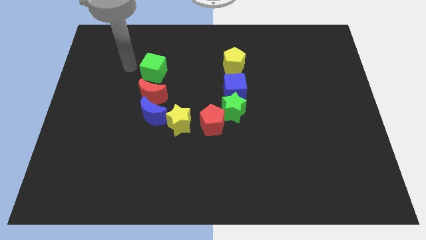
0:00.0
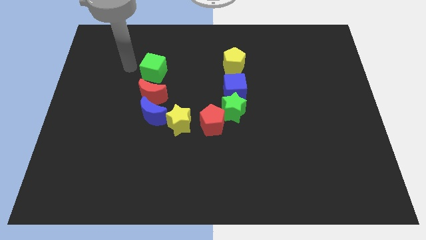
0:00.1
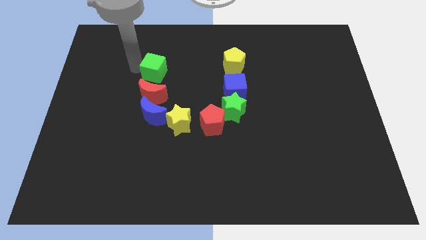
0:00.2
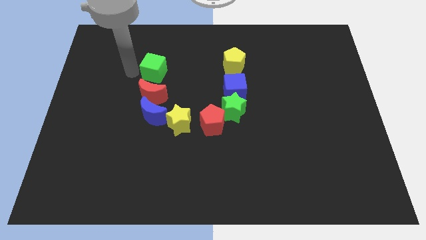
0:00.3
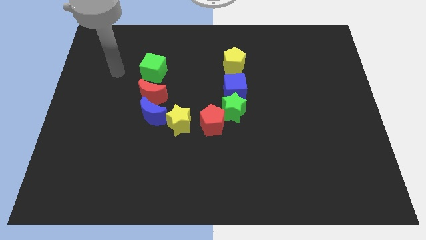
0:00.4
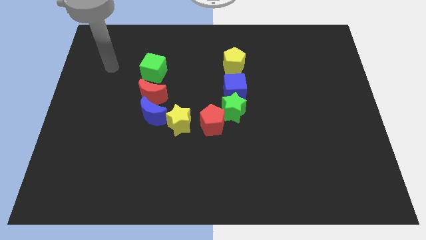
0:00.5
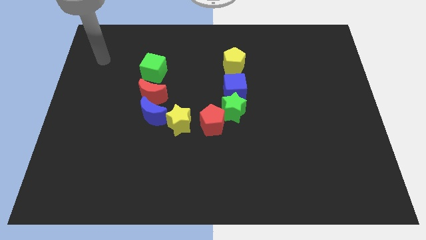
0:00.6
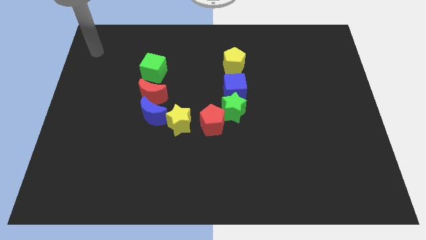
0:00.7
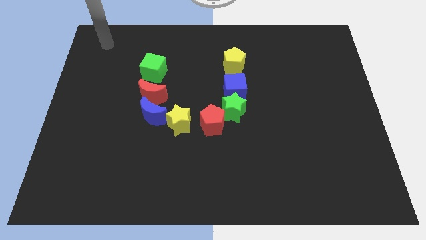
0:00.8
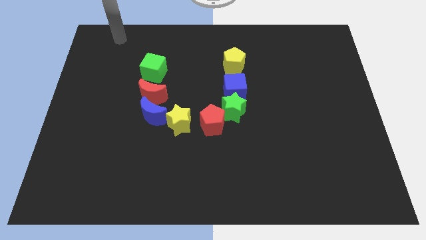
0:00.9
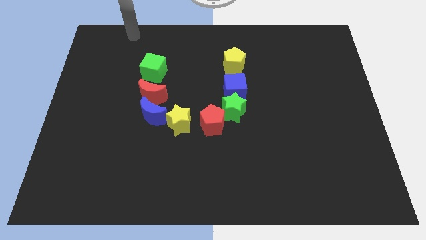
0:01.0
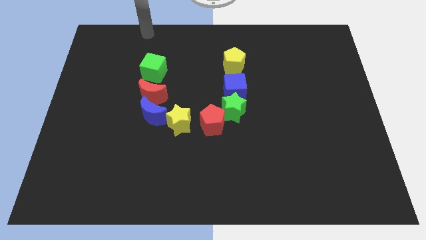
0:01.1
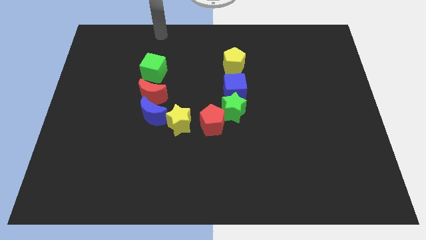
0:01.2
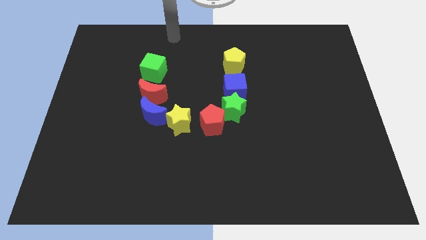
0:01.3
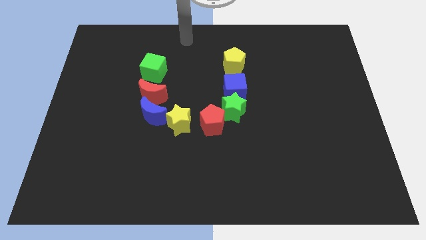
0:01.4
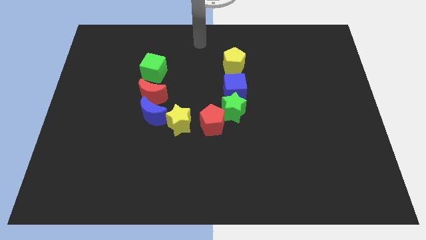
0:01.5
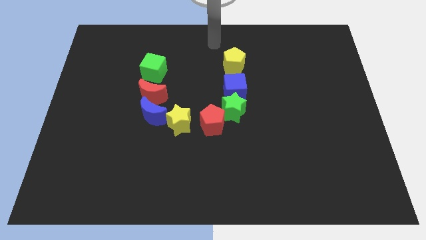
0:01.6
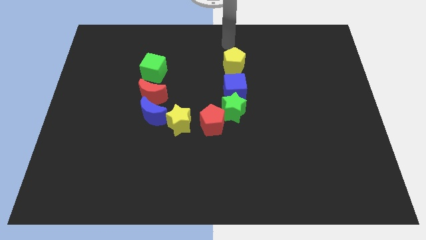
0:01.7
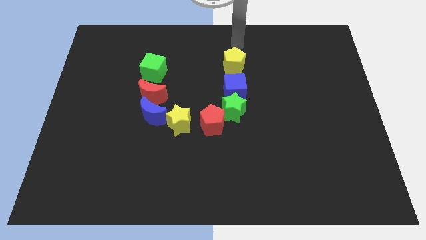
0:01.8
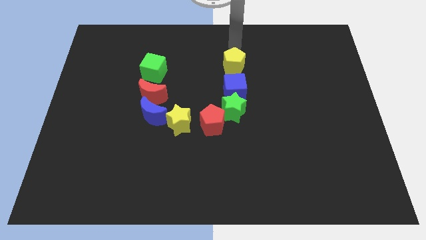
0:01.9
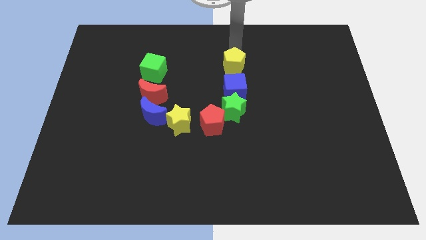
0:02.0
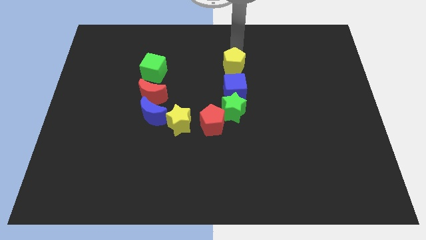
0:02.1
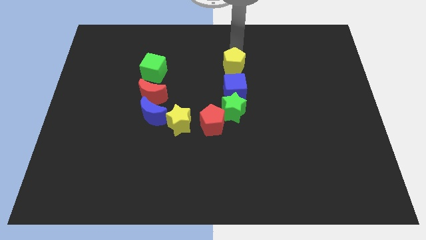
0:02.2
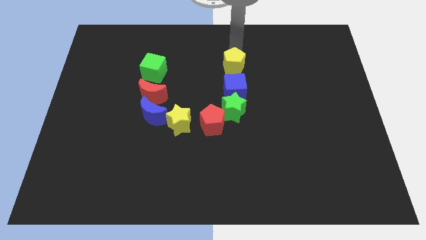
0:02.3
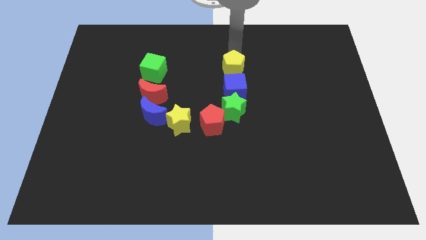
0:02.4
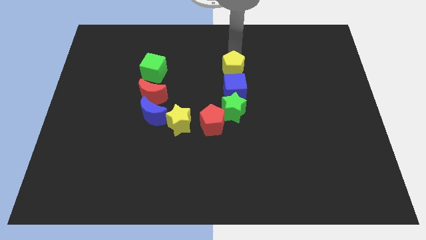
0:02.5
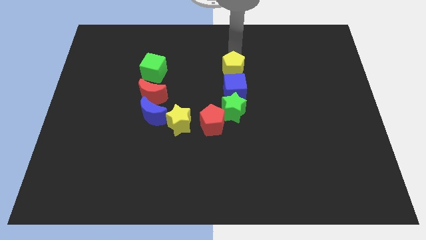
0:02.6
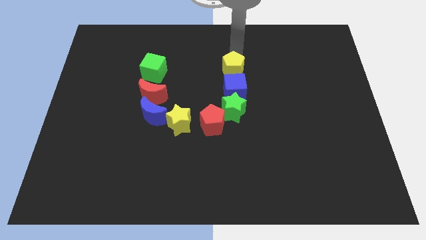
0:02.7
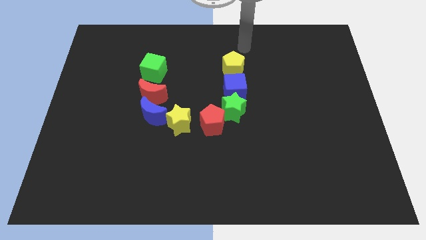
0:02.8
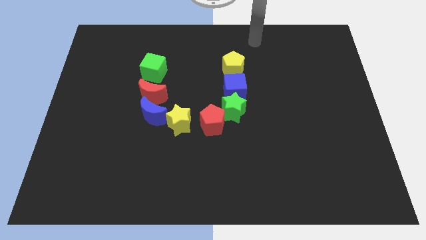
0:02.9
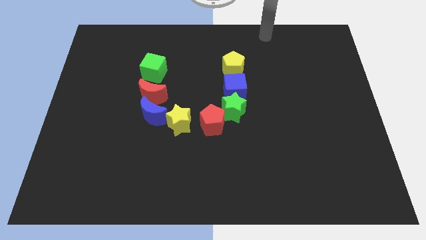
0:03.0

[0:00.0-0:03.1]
move the yellow pentagon close to the blue cube

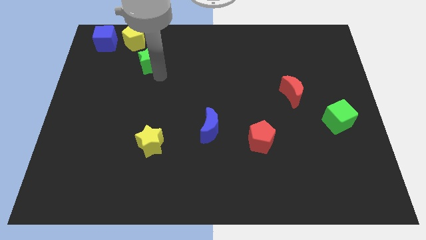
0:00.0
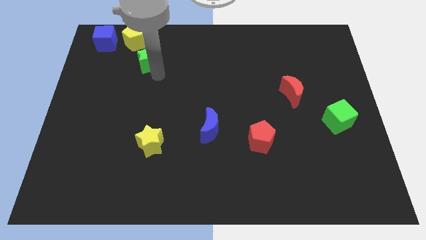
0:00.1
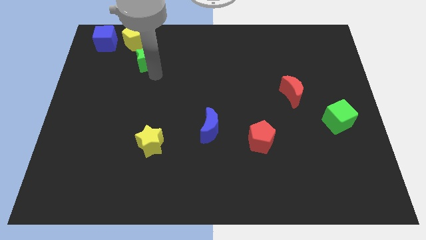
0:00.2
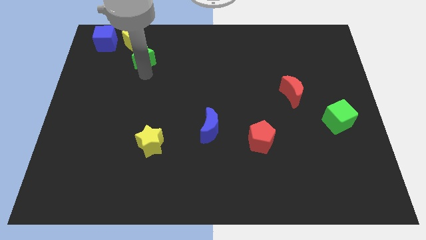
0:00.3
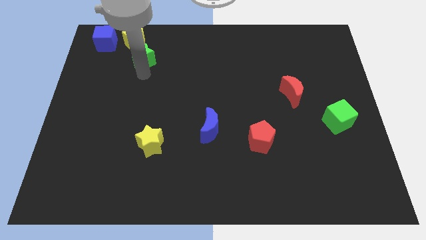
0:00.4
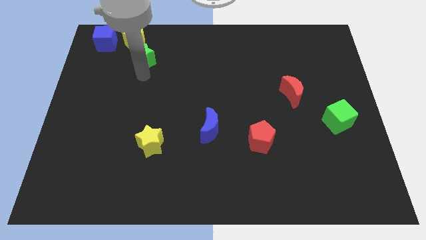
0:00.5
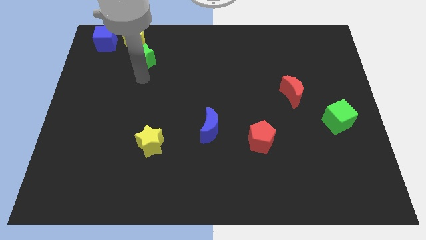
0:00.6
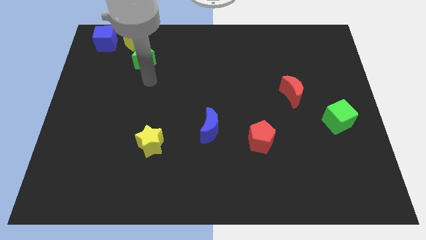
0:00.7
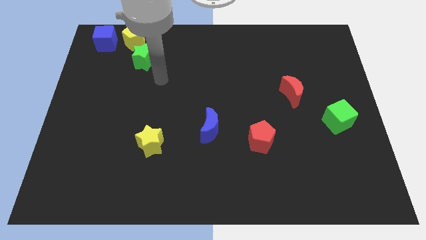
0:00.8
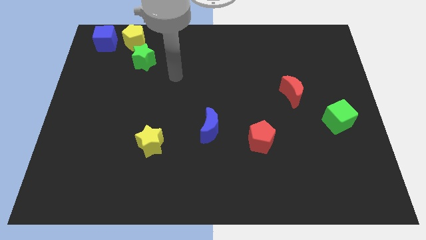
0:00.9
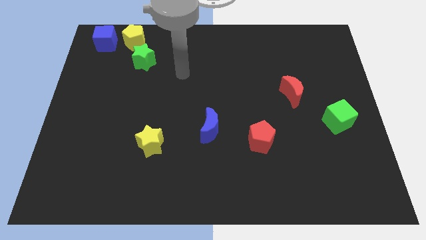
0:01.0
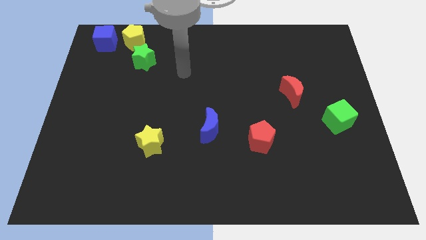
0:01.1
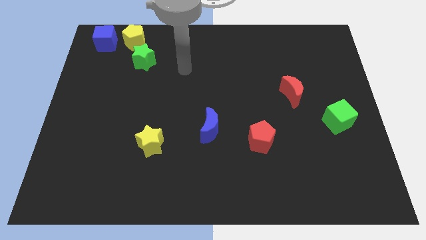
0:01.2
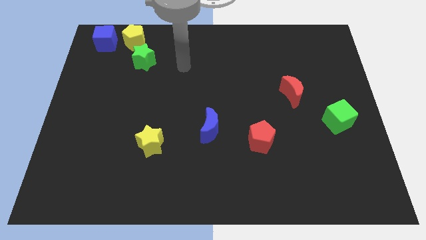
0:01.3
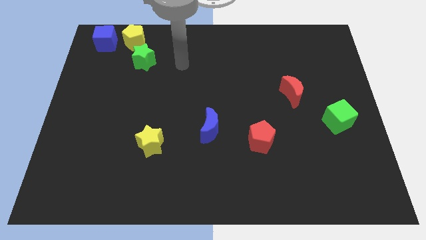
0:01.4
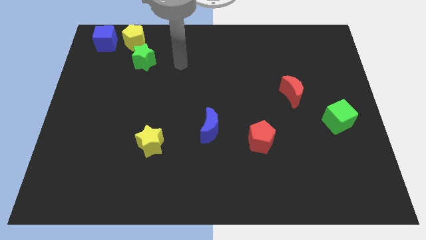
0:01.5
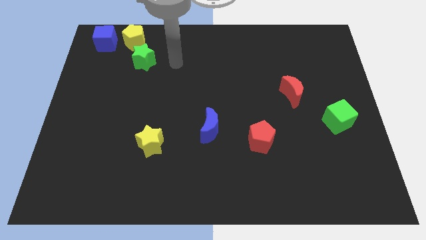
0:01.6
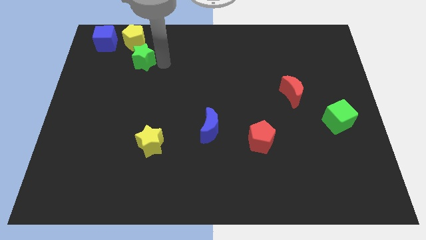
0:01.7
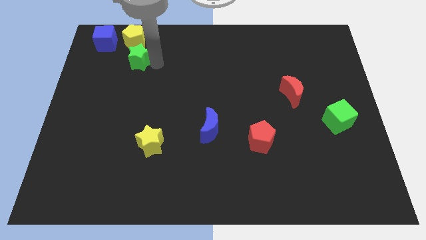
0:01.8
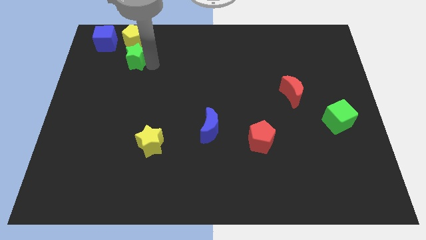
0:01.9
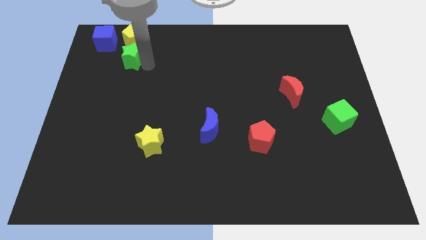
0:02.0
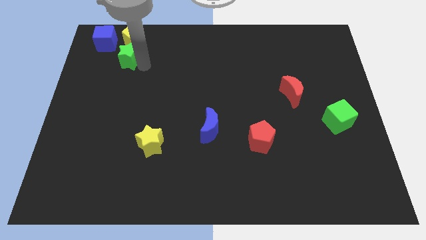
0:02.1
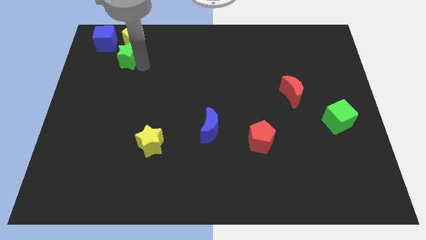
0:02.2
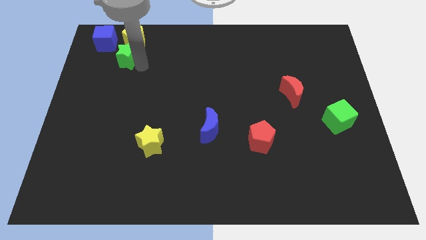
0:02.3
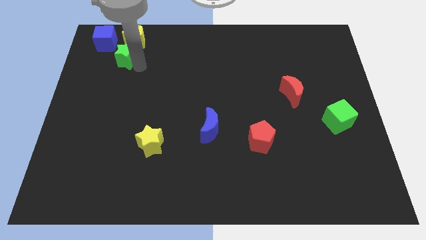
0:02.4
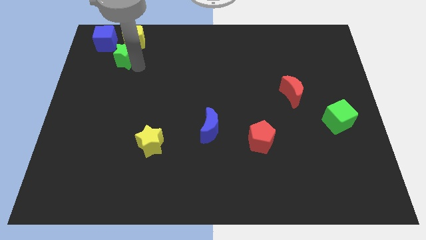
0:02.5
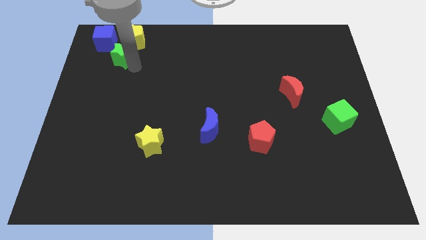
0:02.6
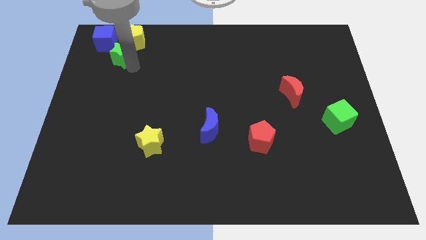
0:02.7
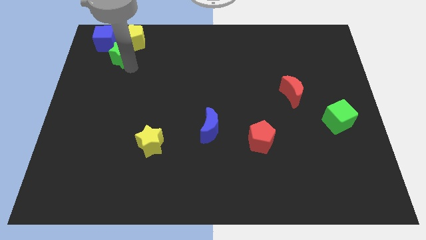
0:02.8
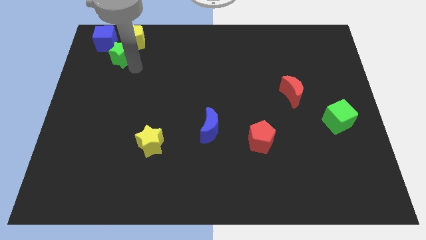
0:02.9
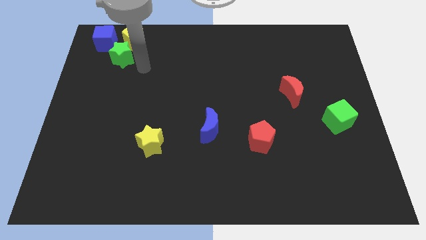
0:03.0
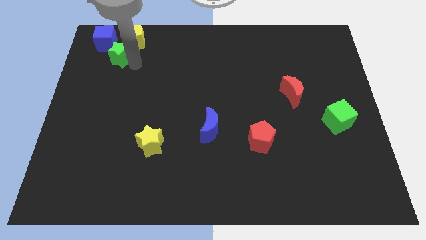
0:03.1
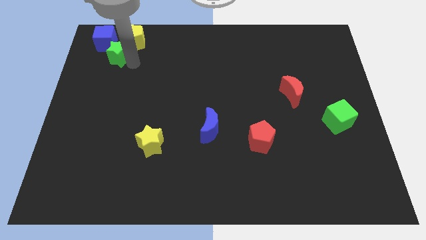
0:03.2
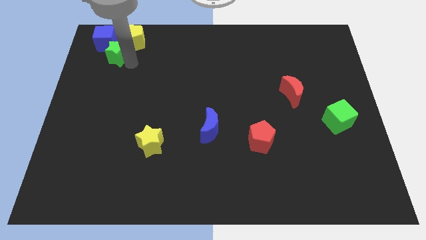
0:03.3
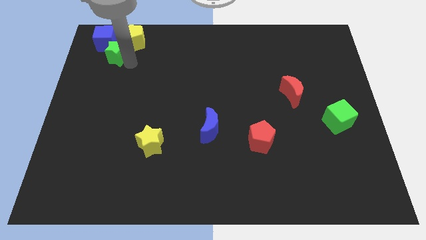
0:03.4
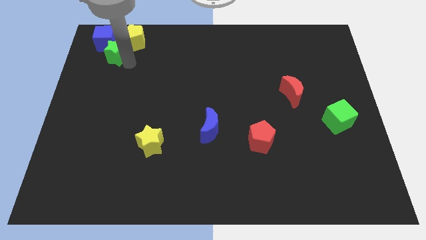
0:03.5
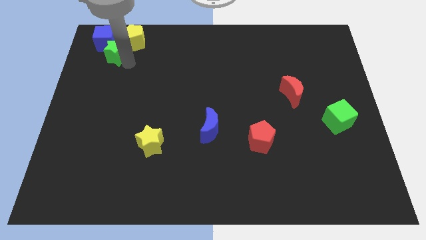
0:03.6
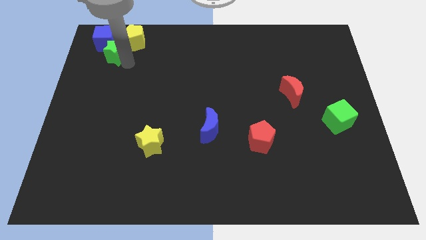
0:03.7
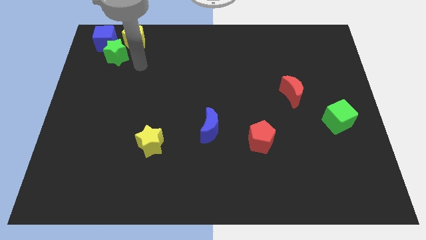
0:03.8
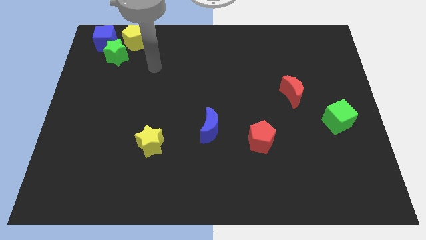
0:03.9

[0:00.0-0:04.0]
push the green star into the blue cube

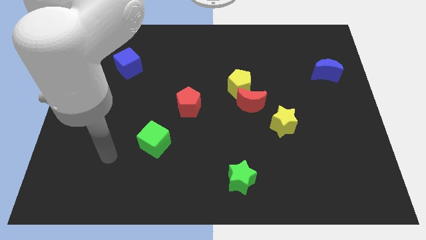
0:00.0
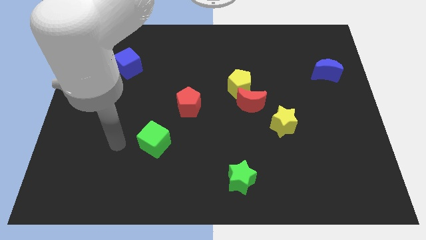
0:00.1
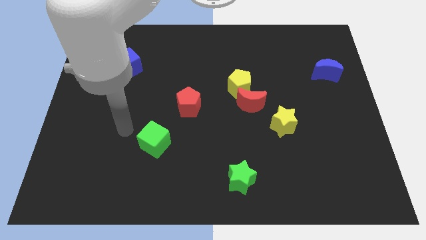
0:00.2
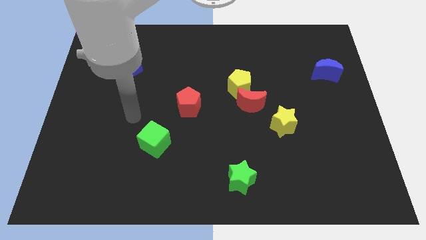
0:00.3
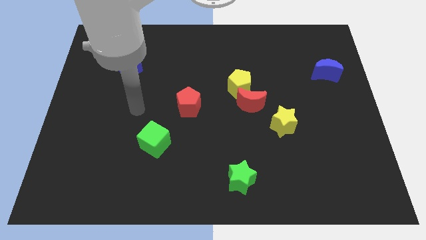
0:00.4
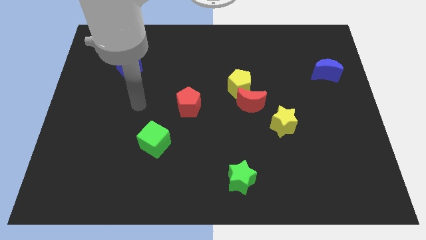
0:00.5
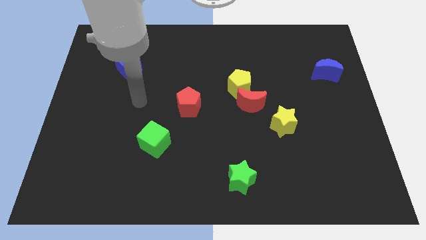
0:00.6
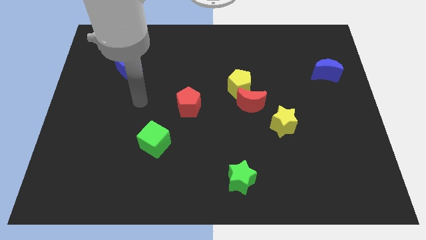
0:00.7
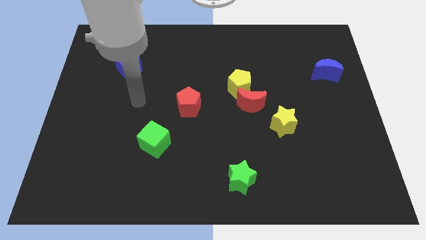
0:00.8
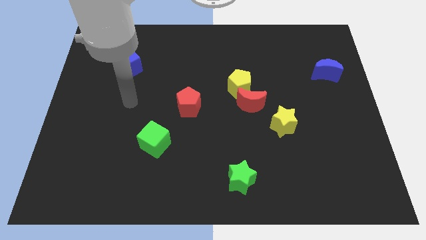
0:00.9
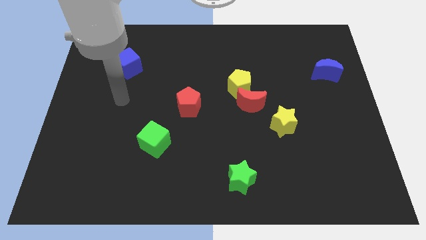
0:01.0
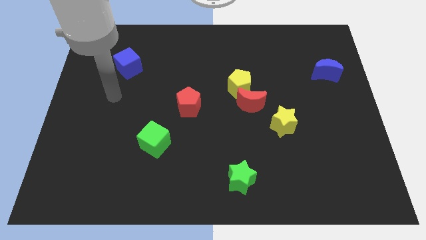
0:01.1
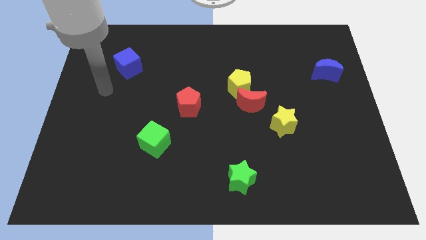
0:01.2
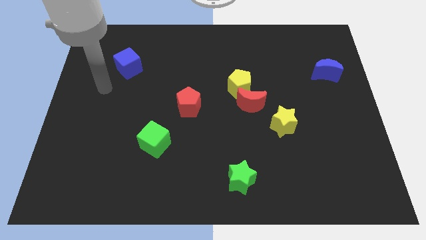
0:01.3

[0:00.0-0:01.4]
move your hand towards the top left

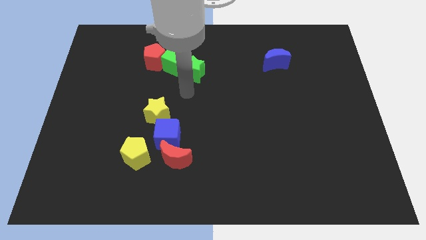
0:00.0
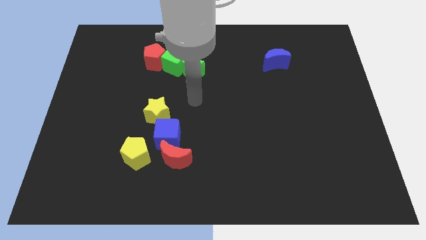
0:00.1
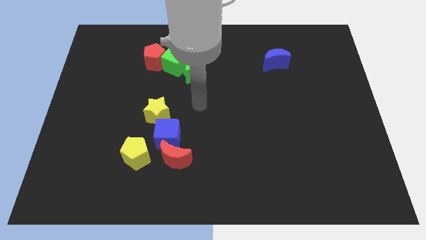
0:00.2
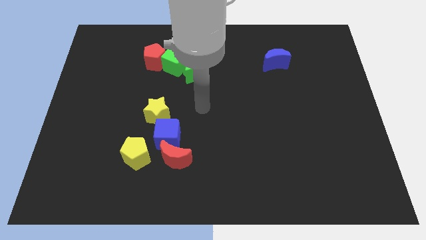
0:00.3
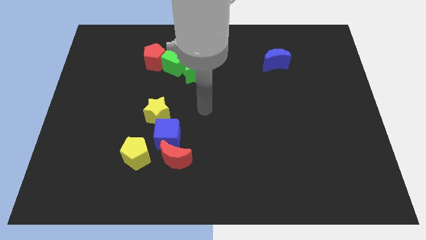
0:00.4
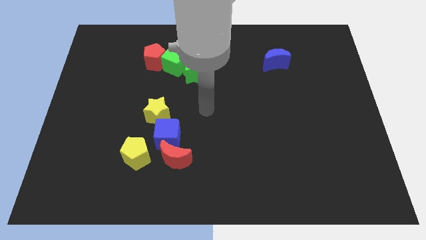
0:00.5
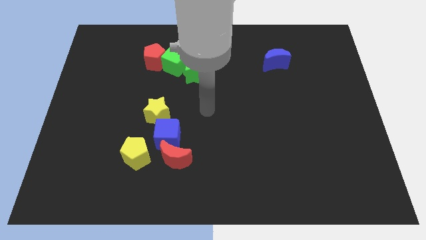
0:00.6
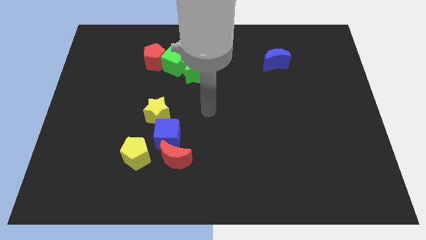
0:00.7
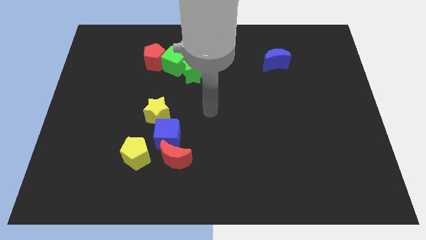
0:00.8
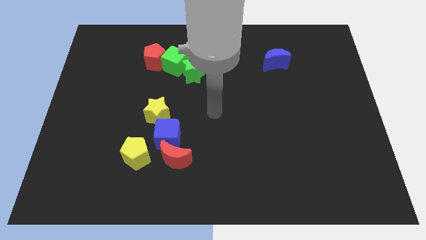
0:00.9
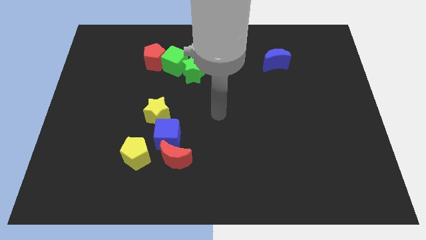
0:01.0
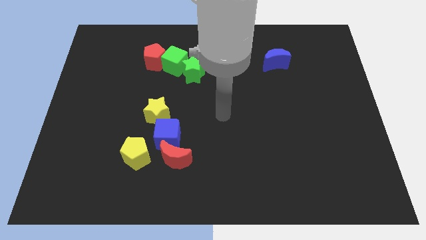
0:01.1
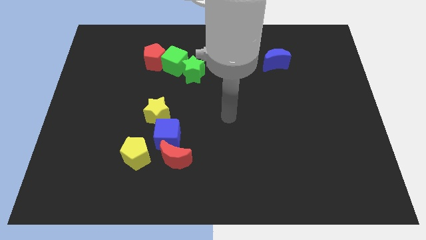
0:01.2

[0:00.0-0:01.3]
place arm in the center
